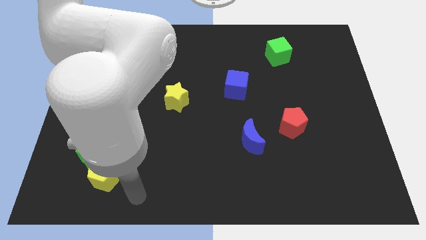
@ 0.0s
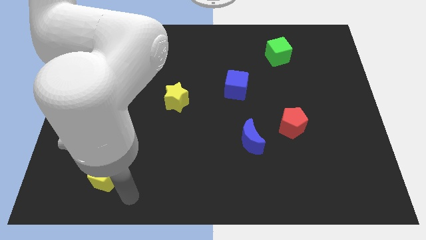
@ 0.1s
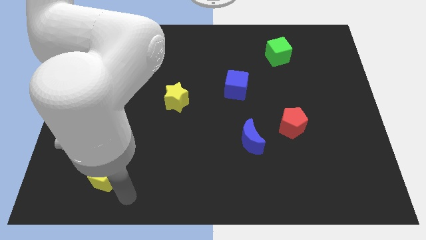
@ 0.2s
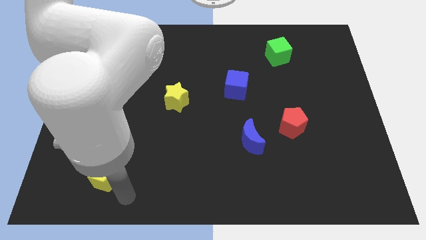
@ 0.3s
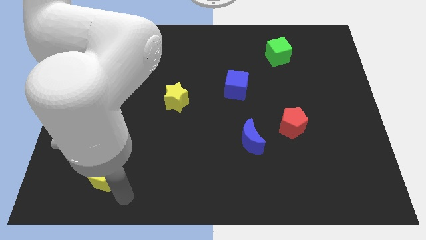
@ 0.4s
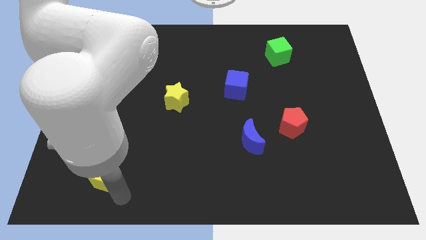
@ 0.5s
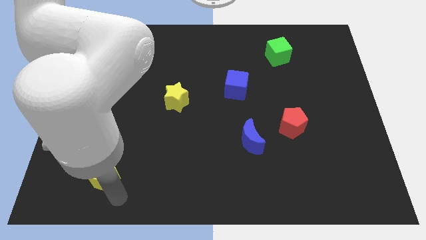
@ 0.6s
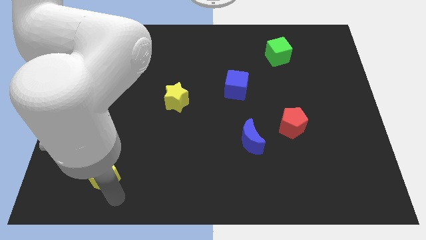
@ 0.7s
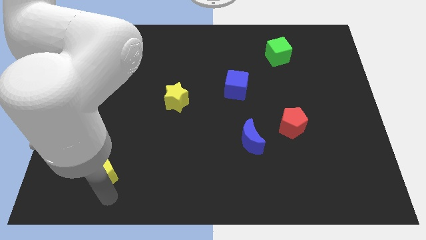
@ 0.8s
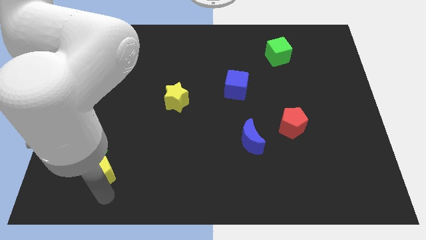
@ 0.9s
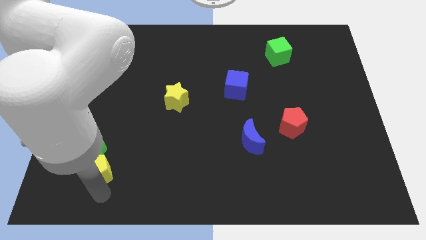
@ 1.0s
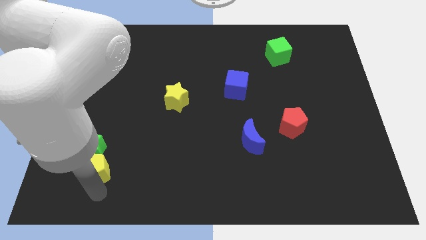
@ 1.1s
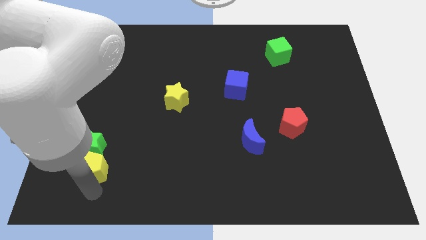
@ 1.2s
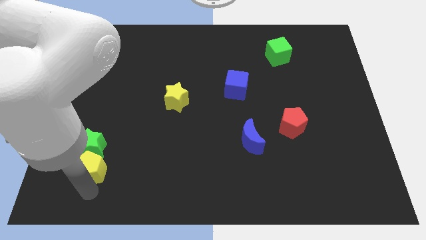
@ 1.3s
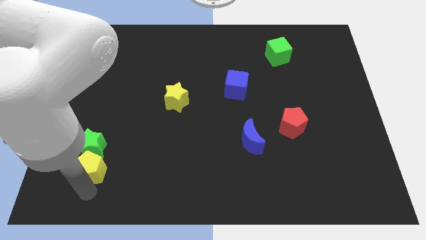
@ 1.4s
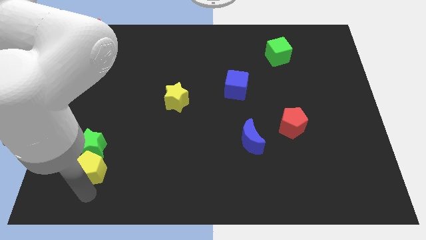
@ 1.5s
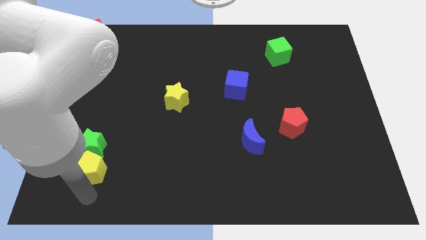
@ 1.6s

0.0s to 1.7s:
move the yellow pentagon to the bottom of the green star

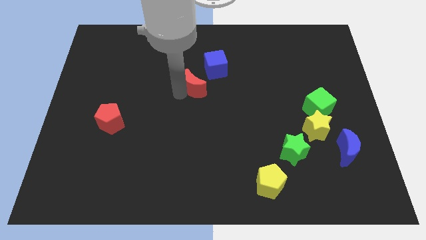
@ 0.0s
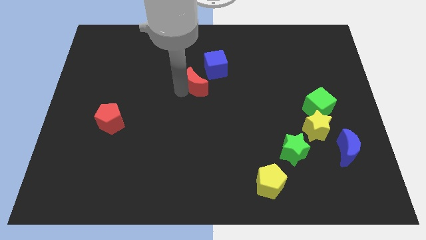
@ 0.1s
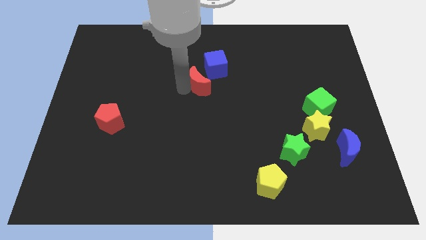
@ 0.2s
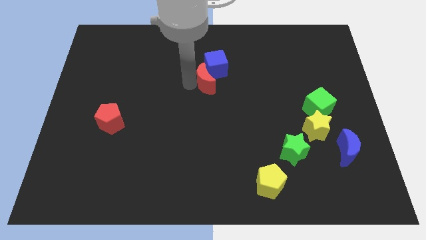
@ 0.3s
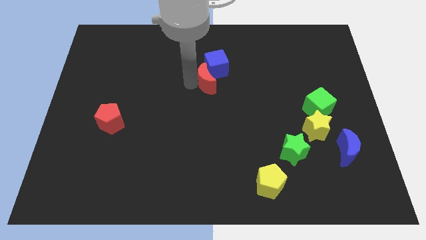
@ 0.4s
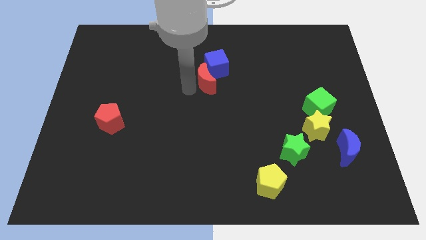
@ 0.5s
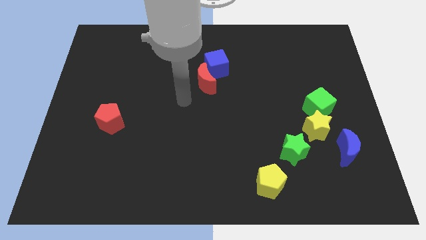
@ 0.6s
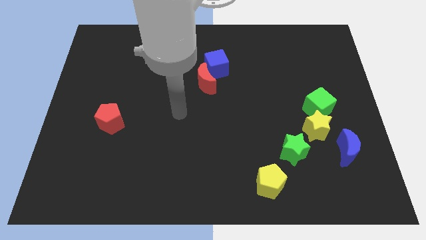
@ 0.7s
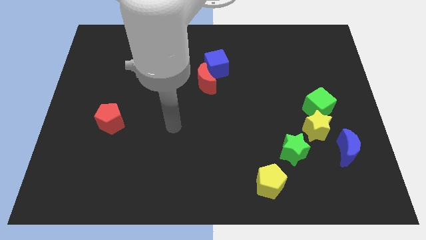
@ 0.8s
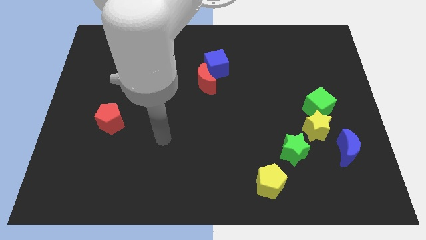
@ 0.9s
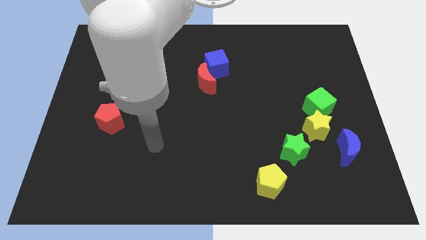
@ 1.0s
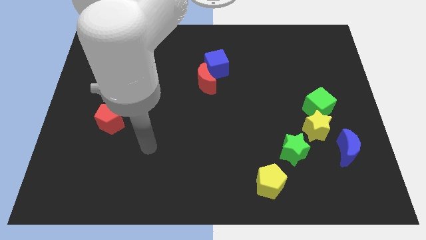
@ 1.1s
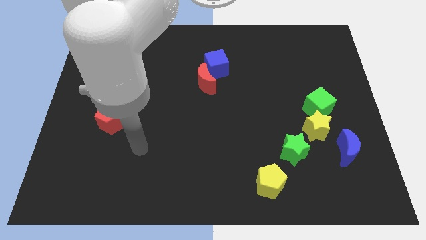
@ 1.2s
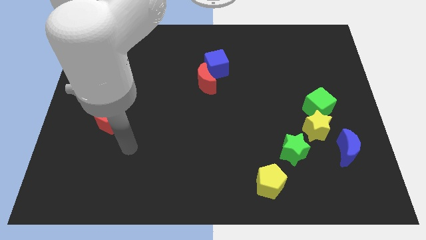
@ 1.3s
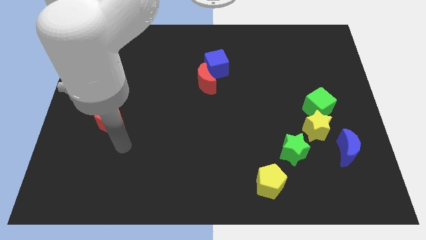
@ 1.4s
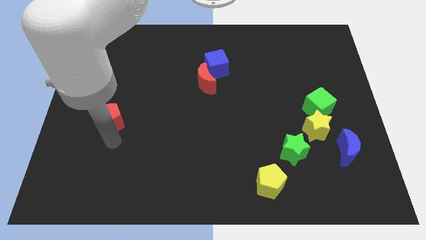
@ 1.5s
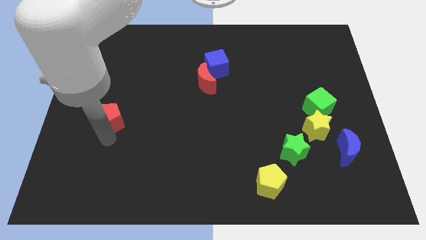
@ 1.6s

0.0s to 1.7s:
push the red crescent into the blue cube

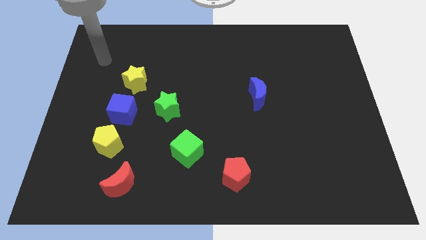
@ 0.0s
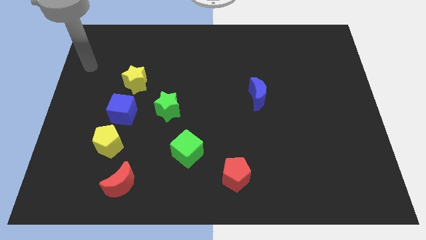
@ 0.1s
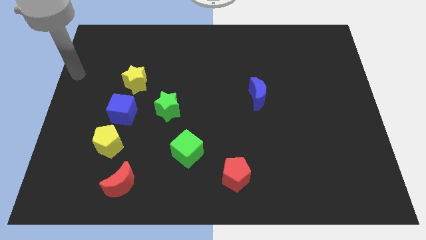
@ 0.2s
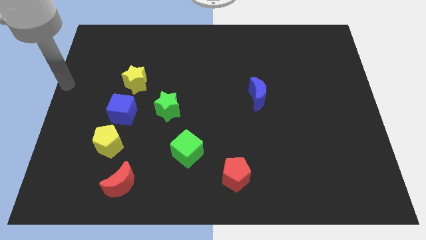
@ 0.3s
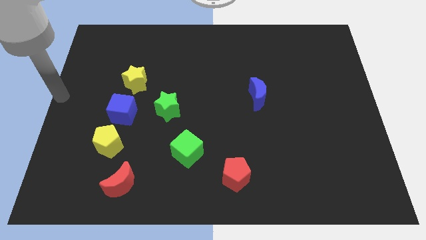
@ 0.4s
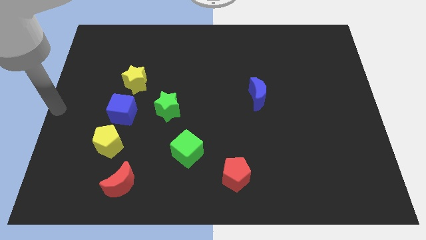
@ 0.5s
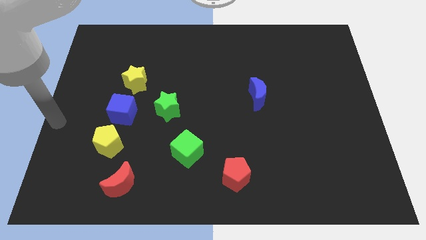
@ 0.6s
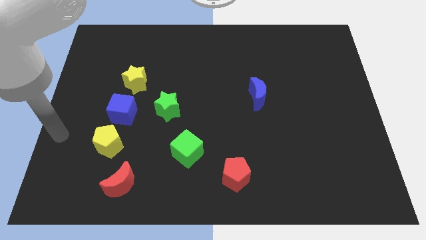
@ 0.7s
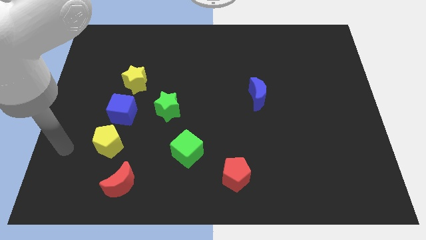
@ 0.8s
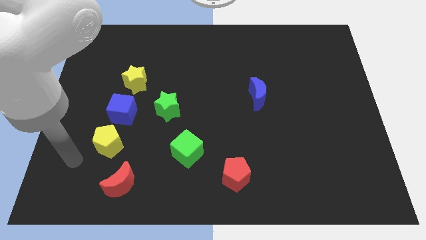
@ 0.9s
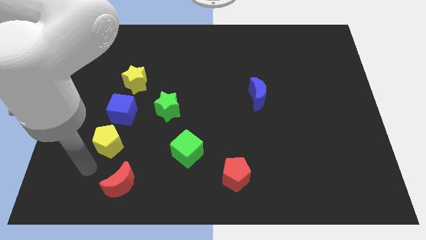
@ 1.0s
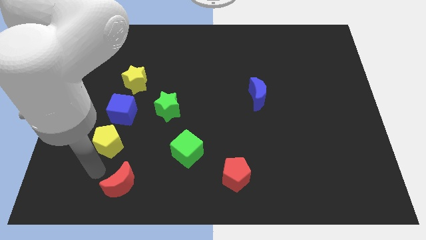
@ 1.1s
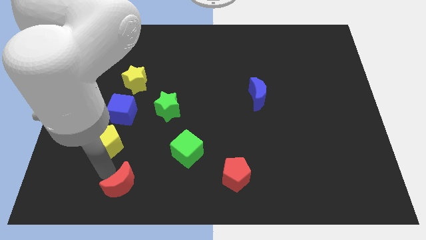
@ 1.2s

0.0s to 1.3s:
move your arm to the bottom side of the yellow pentagon

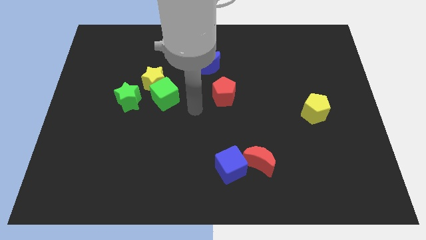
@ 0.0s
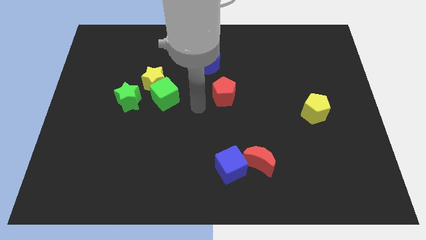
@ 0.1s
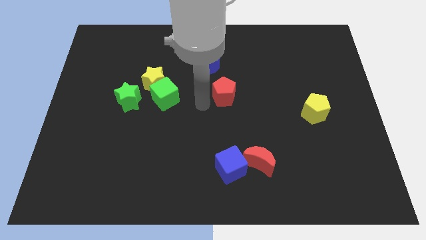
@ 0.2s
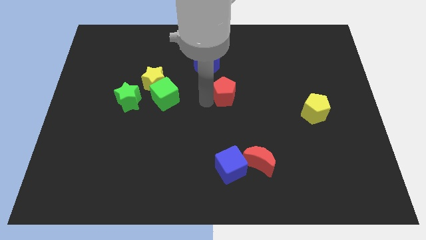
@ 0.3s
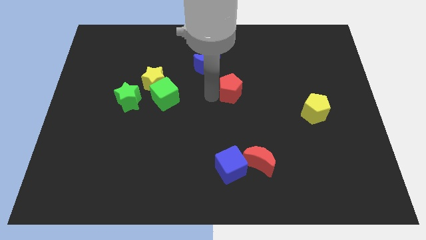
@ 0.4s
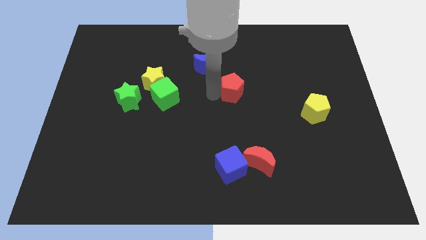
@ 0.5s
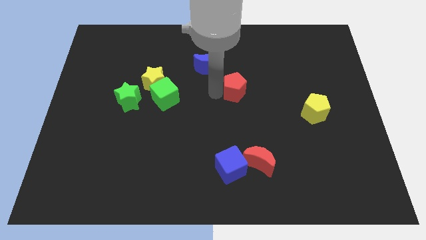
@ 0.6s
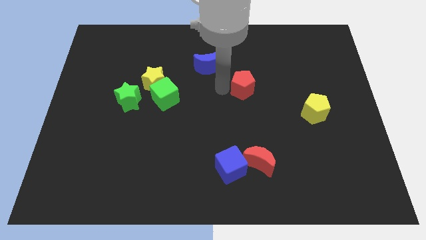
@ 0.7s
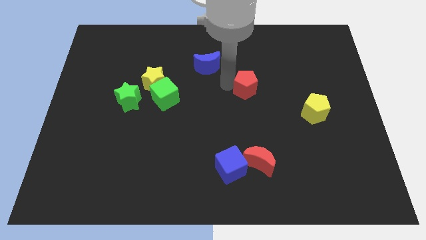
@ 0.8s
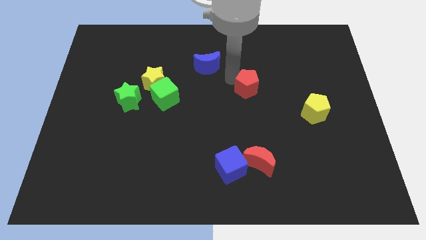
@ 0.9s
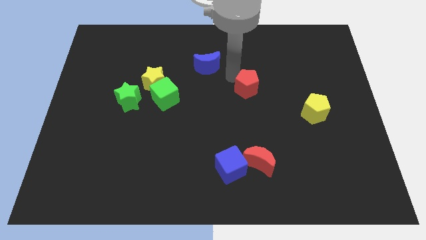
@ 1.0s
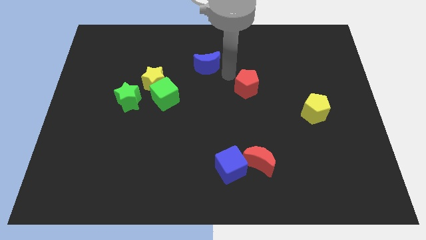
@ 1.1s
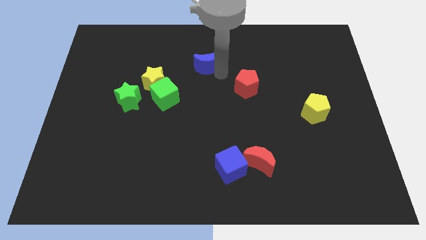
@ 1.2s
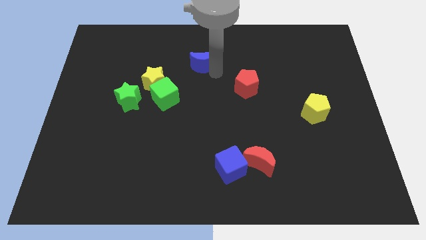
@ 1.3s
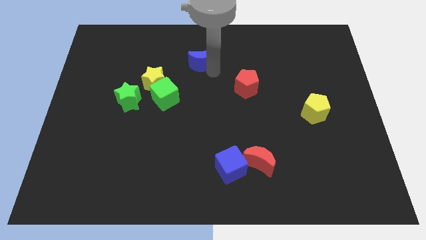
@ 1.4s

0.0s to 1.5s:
place your arm below blue moon

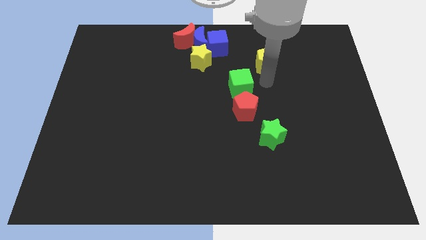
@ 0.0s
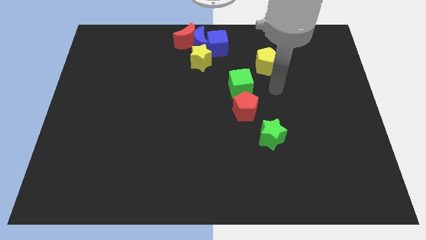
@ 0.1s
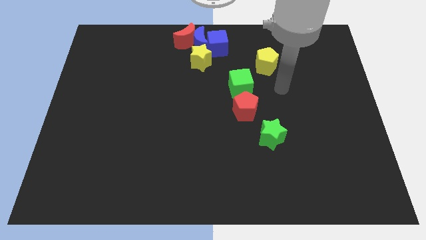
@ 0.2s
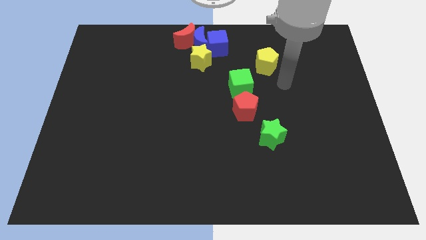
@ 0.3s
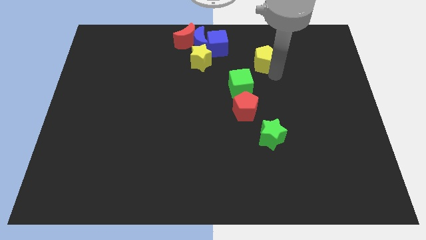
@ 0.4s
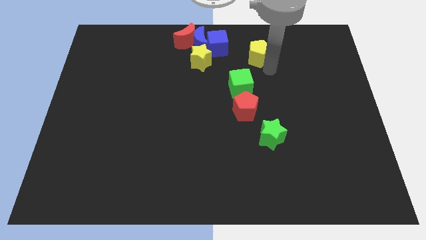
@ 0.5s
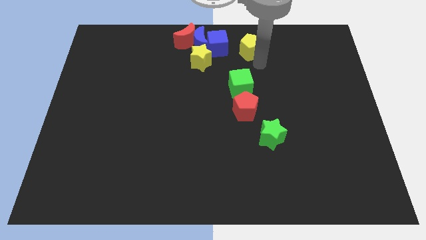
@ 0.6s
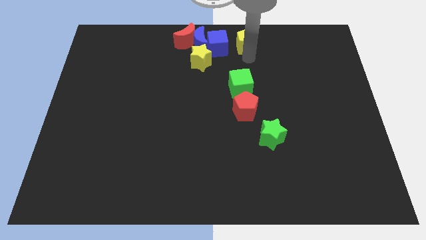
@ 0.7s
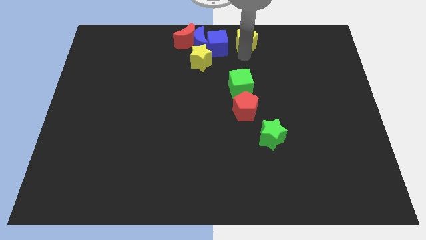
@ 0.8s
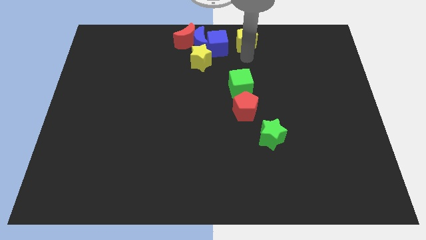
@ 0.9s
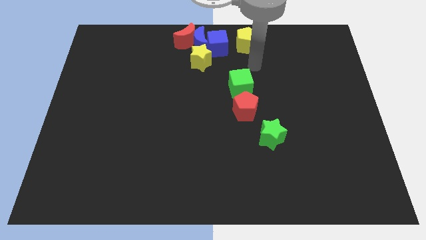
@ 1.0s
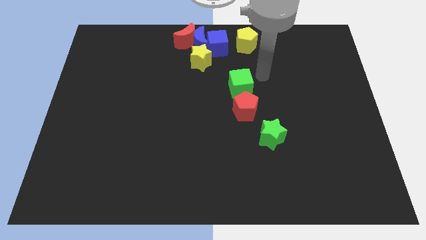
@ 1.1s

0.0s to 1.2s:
place the yellow pentagon to the right of the blue cube

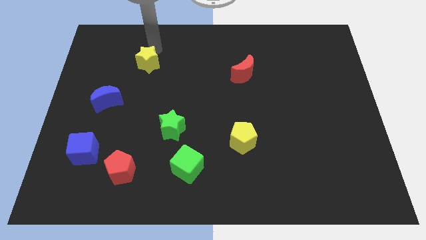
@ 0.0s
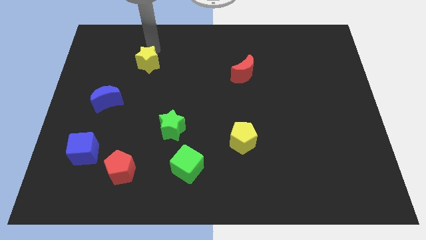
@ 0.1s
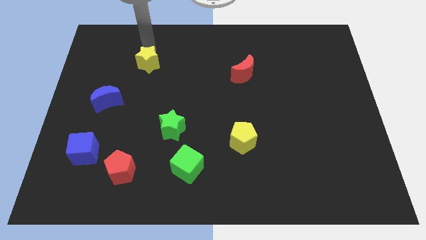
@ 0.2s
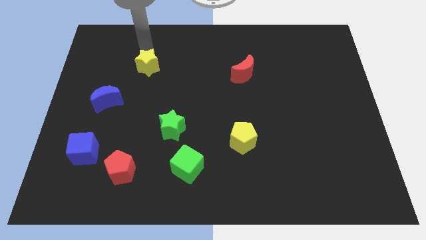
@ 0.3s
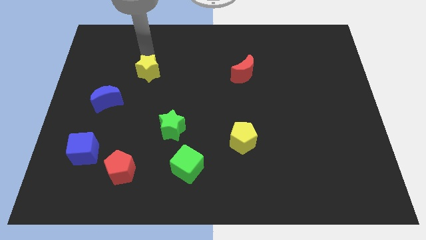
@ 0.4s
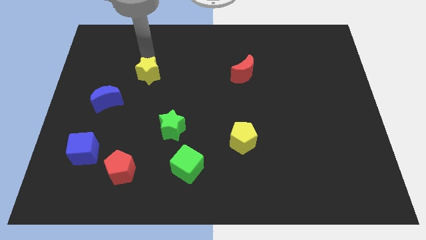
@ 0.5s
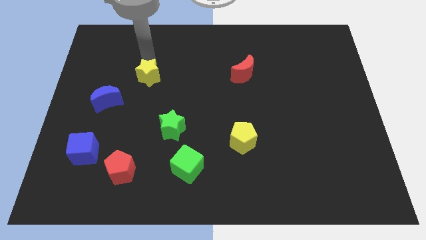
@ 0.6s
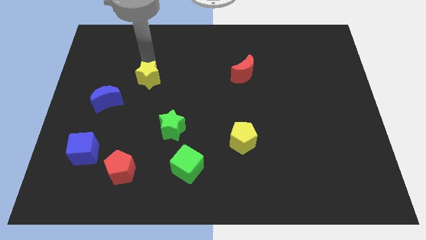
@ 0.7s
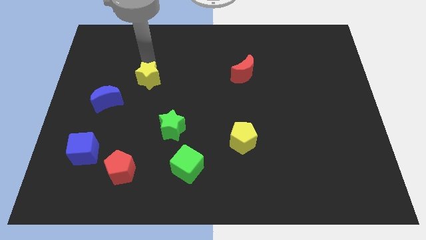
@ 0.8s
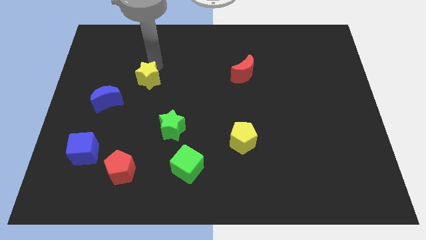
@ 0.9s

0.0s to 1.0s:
push the yellow star opposite to the green star

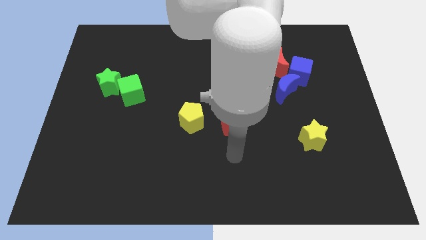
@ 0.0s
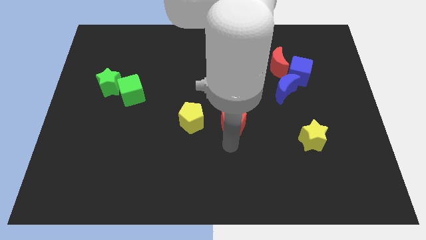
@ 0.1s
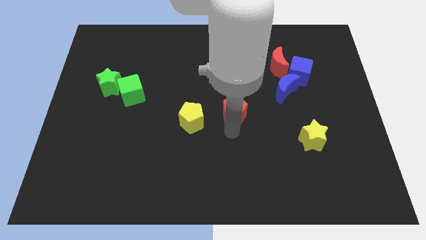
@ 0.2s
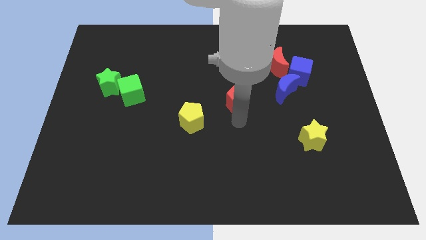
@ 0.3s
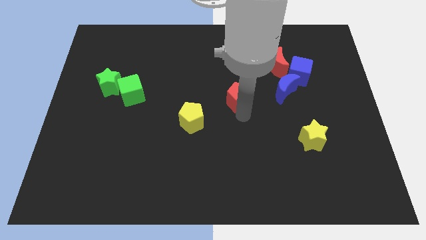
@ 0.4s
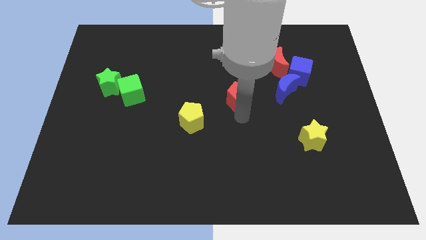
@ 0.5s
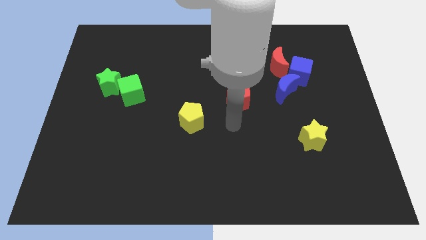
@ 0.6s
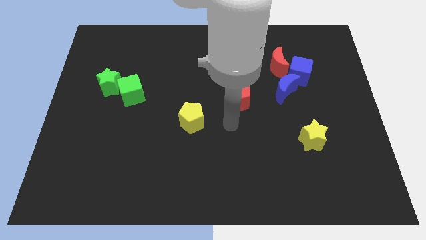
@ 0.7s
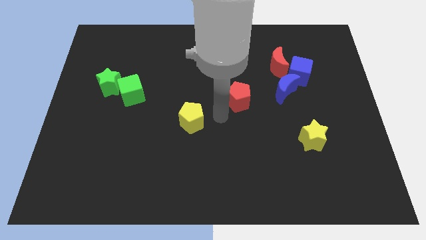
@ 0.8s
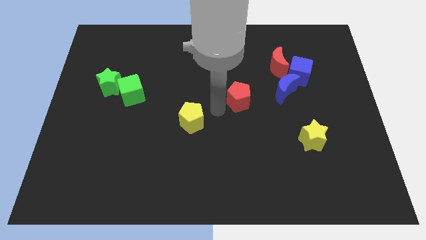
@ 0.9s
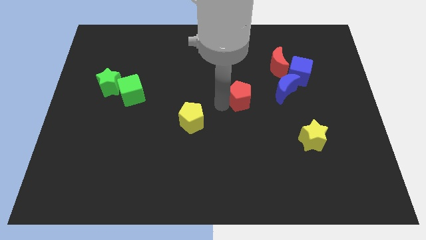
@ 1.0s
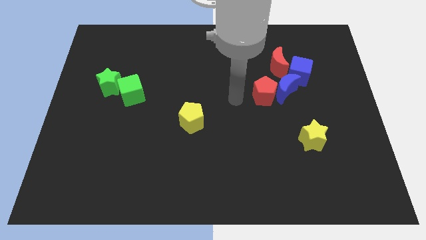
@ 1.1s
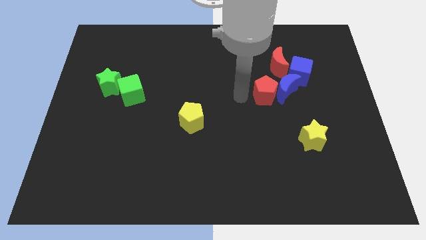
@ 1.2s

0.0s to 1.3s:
push the red pentagon to the left of the blue crescent
